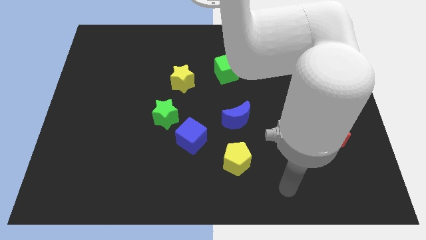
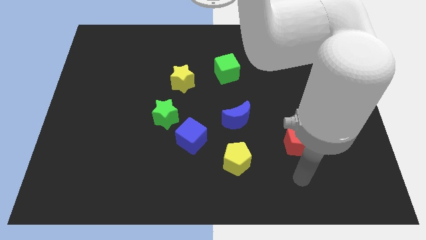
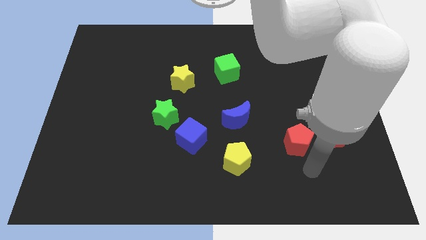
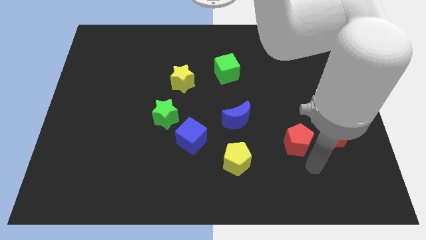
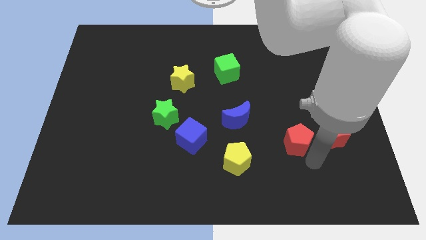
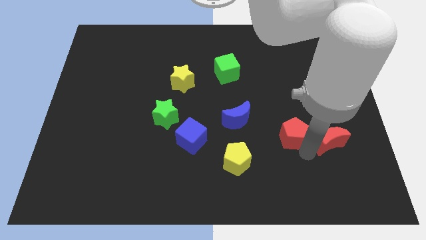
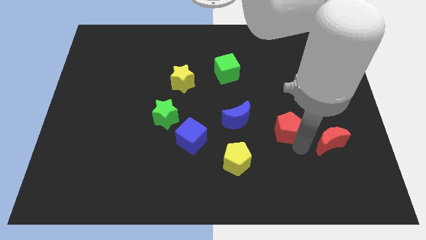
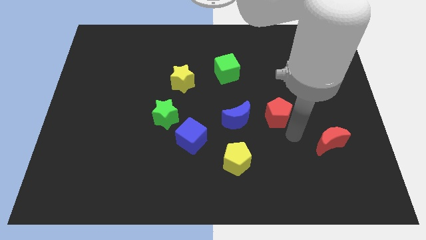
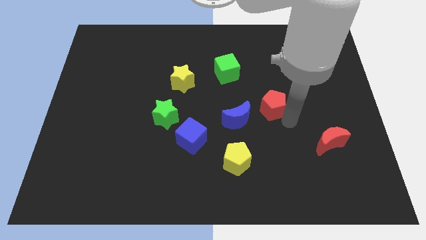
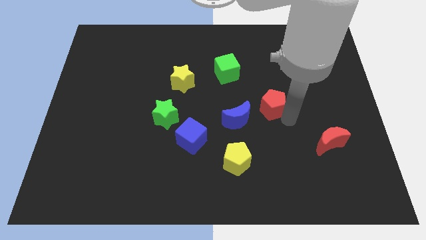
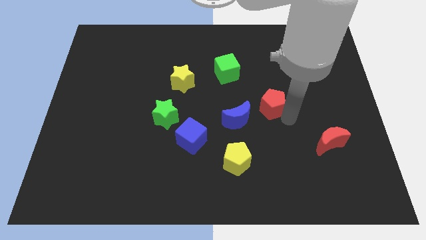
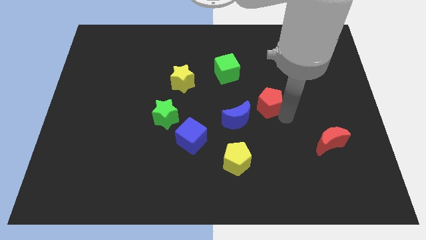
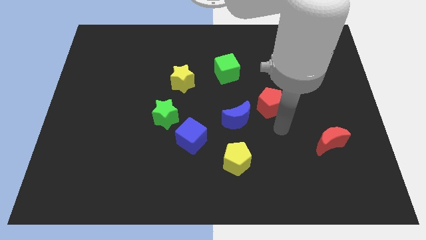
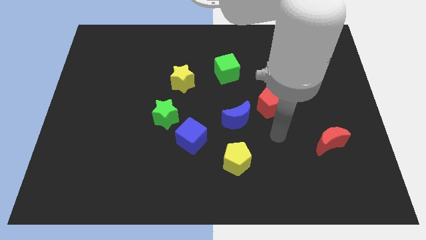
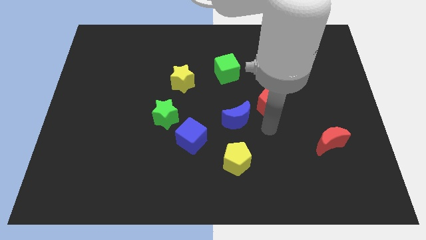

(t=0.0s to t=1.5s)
push the red pentagon to the top right of the blue moon

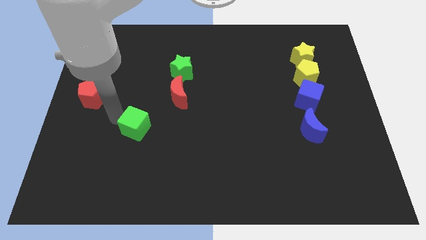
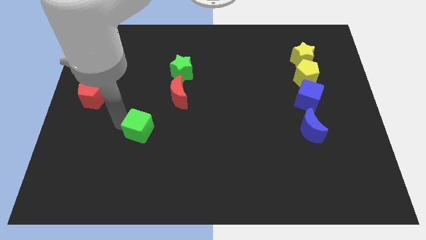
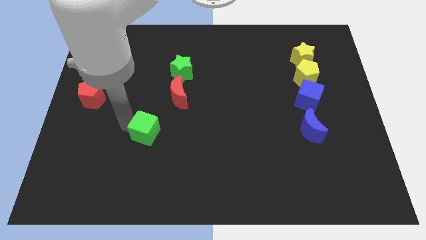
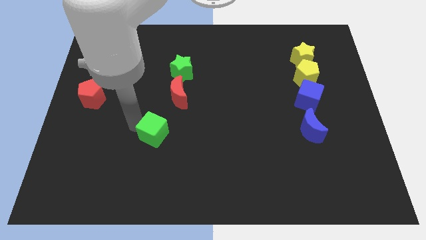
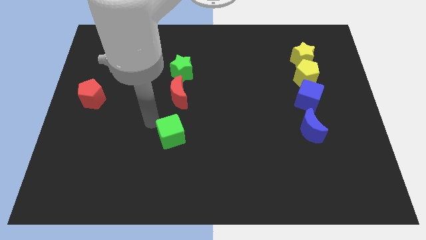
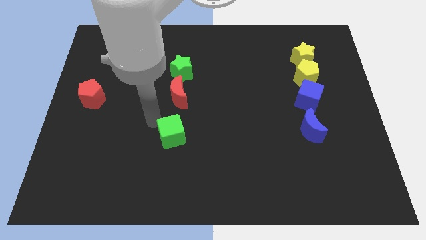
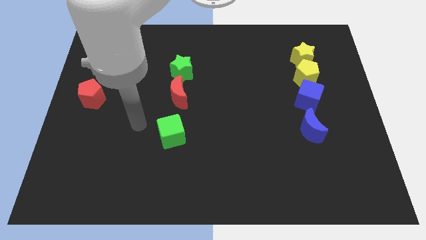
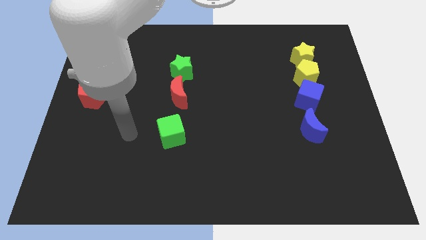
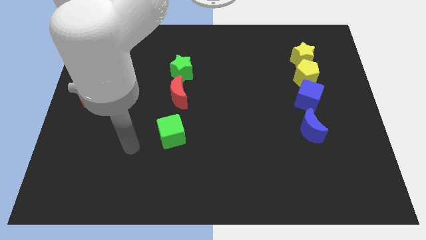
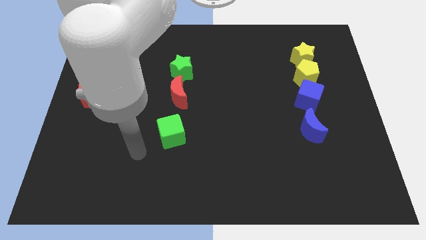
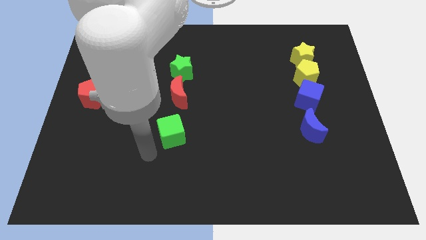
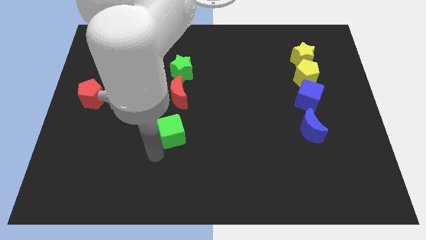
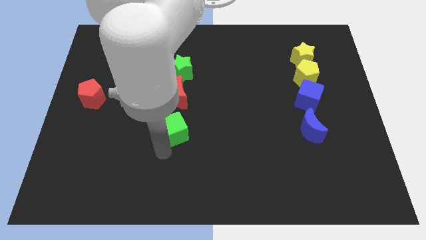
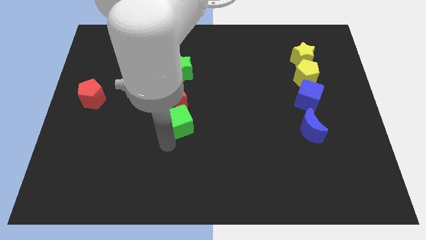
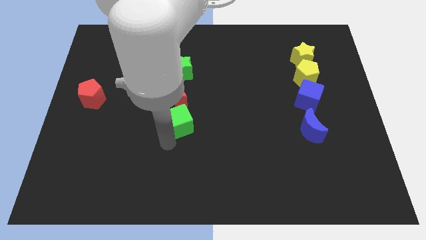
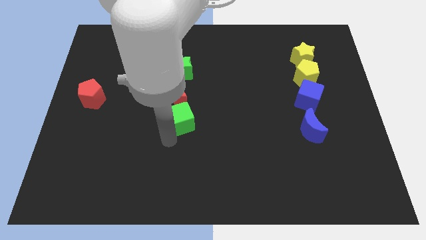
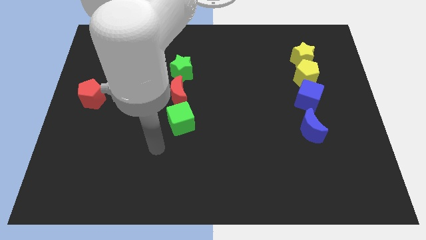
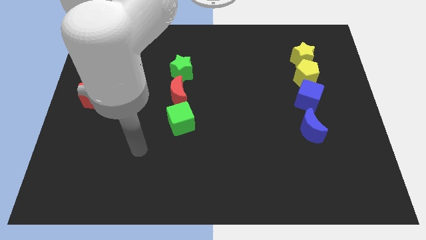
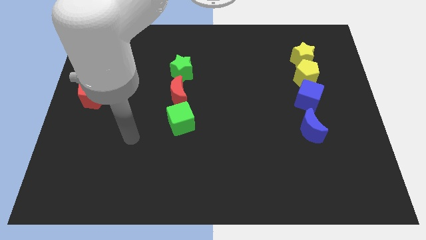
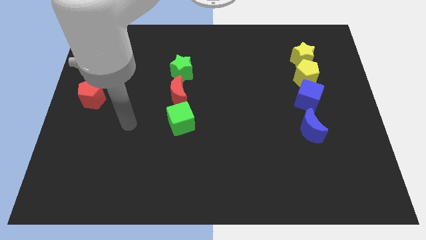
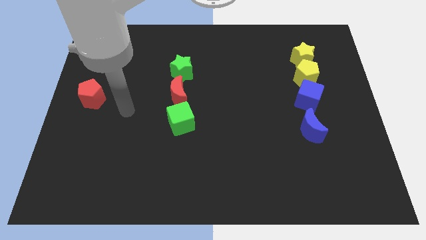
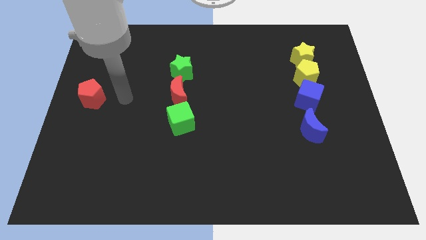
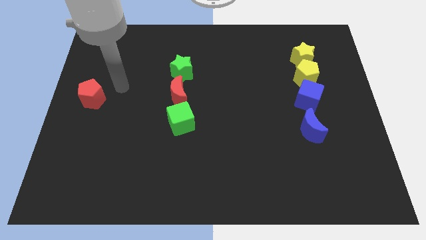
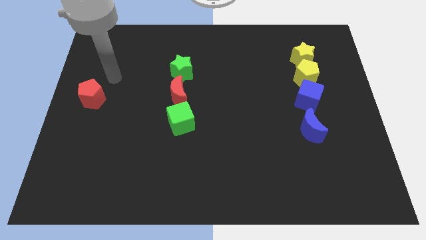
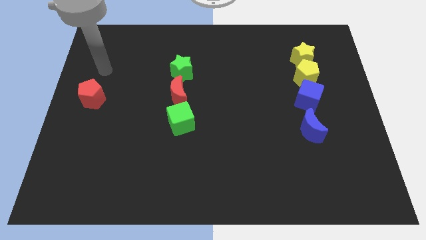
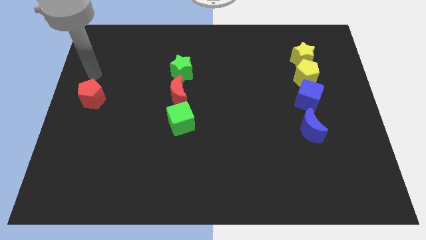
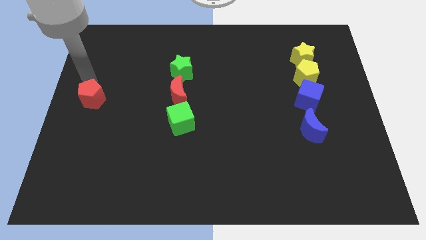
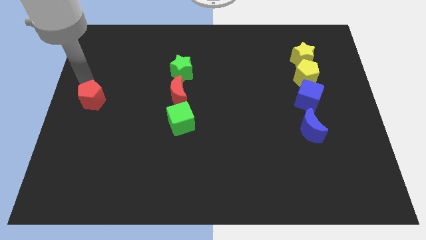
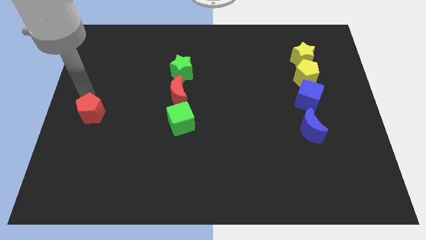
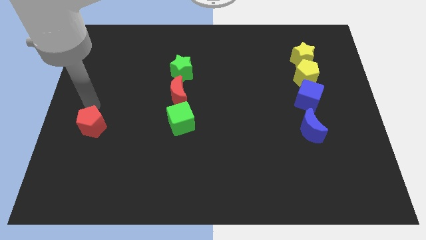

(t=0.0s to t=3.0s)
drag the green cube and place it below the red moon

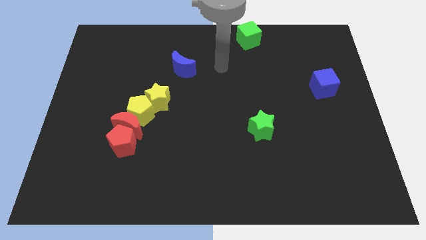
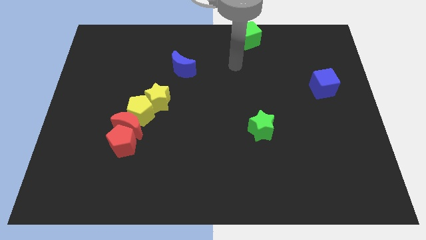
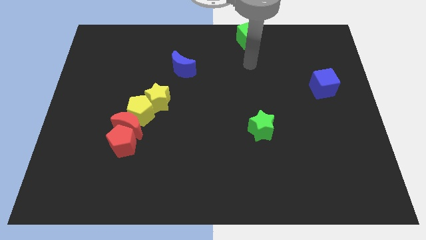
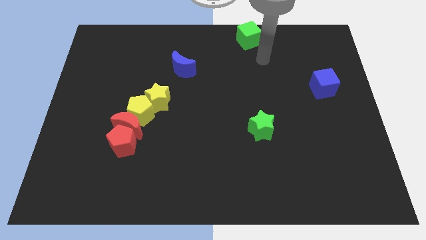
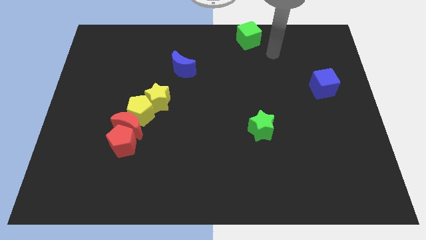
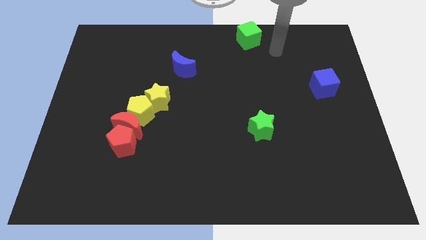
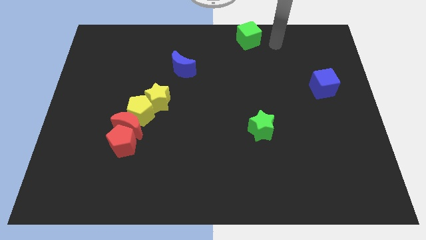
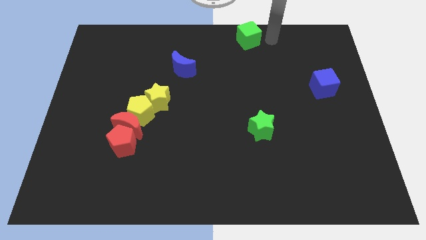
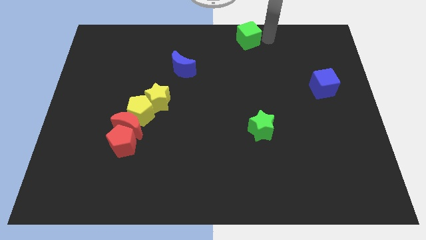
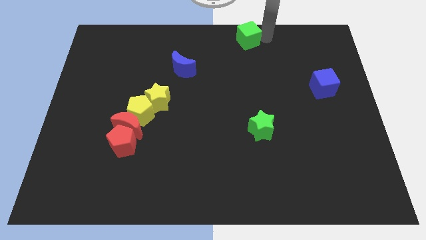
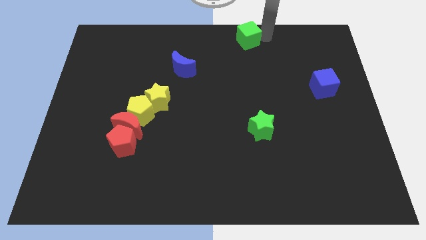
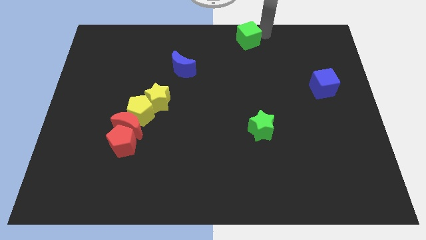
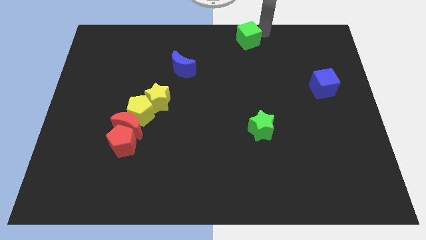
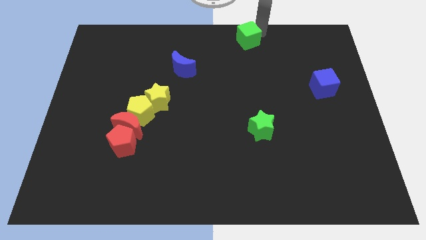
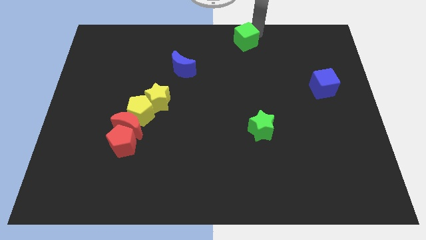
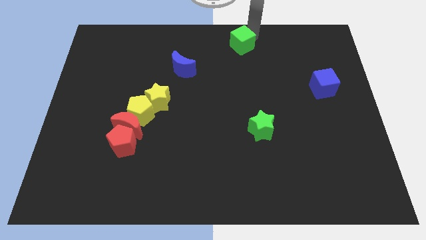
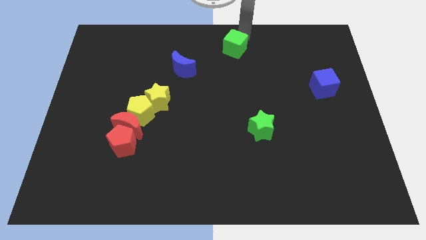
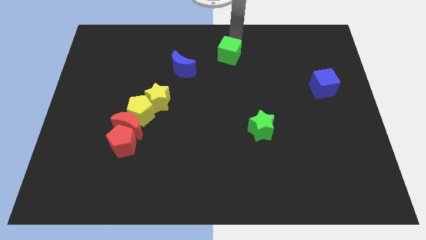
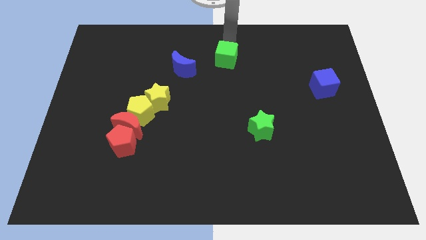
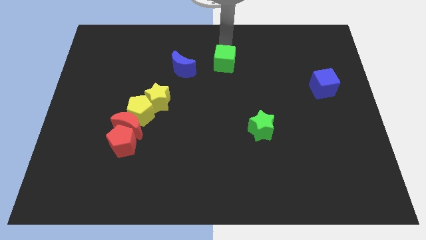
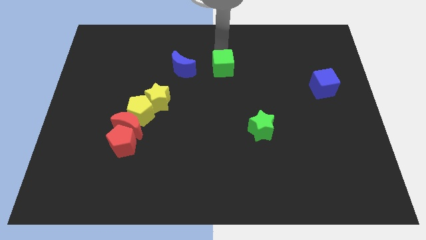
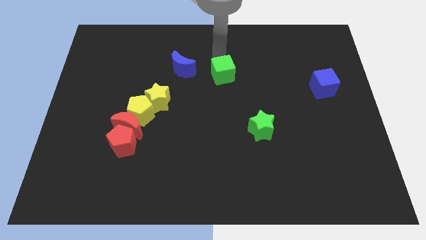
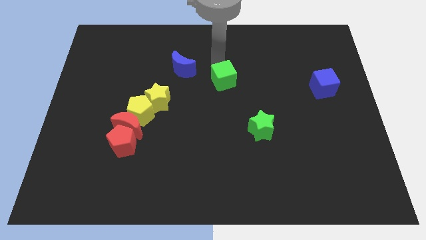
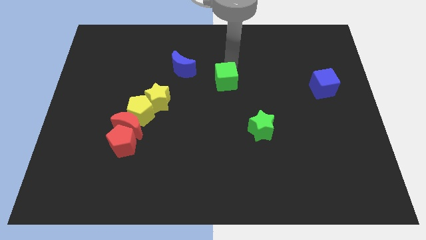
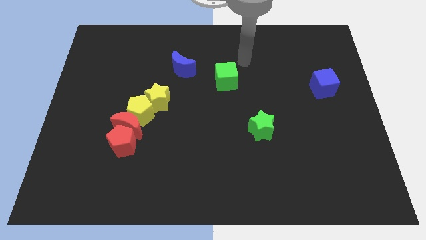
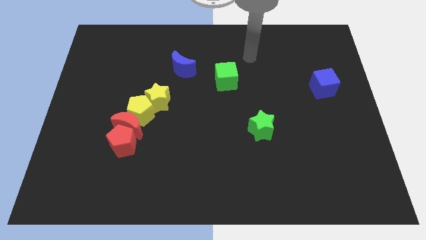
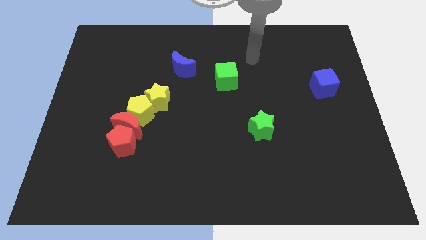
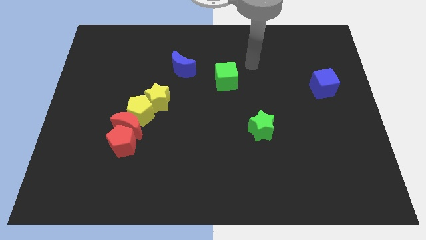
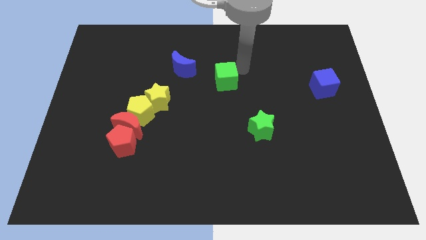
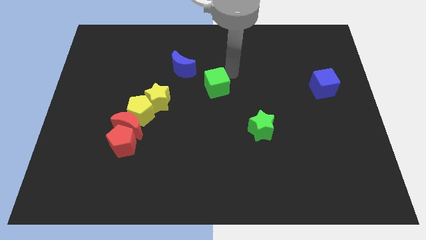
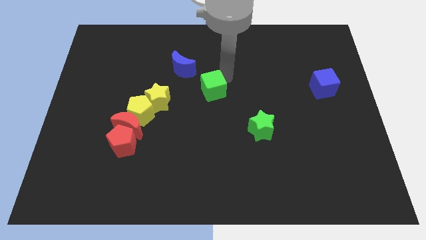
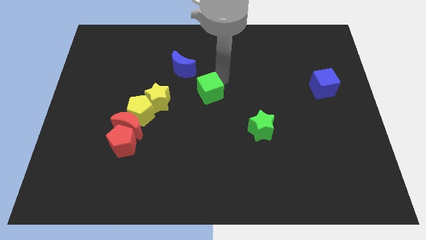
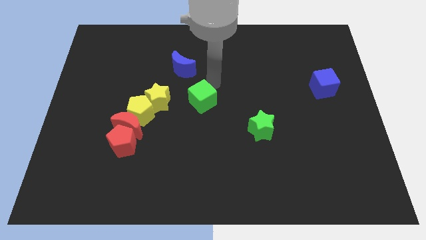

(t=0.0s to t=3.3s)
place the green cube horizontal to the blue cube on the left side

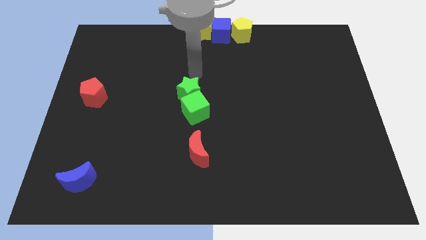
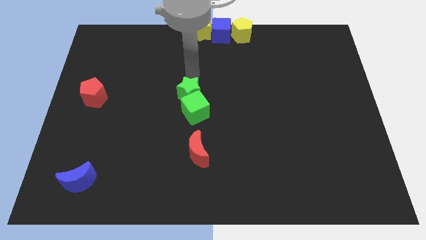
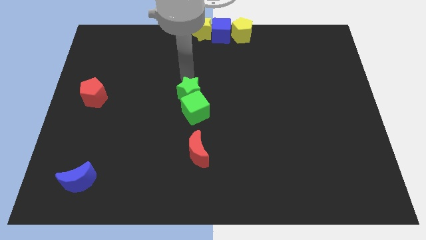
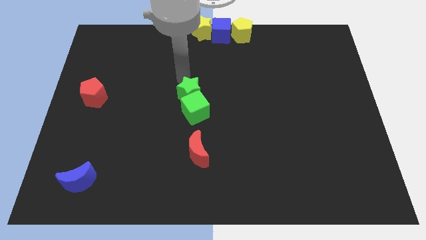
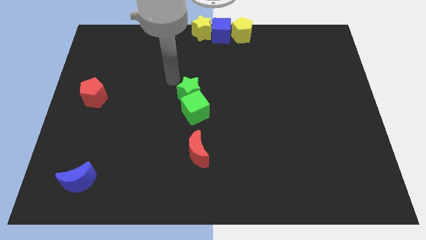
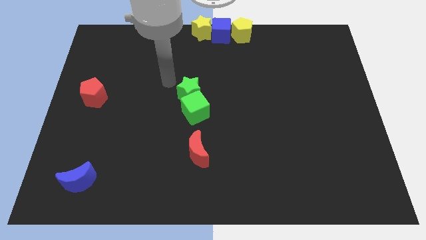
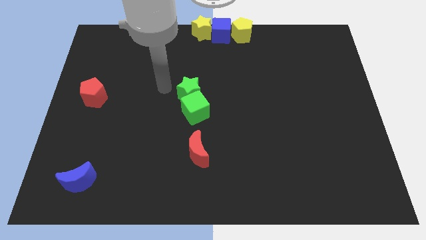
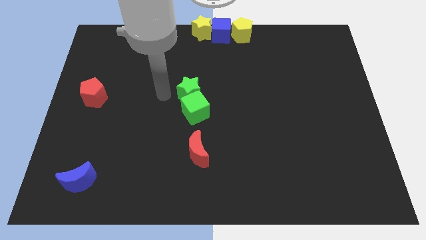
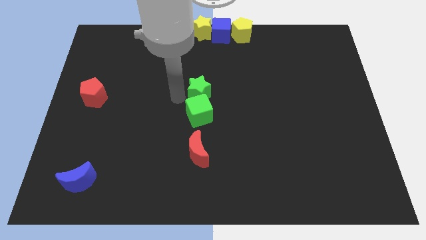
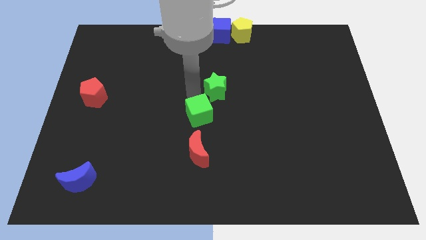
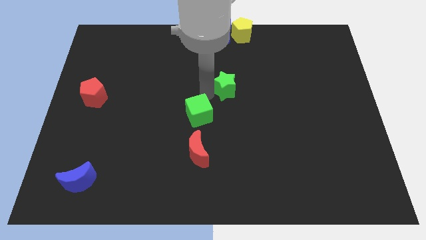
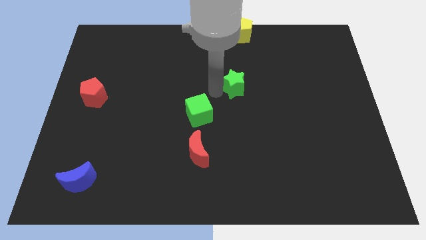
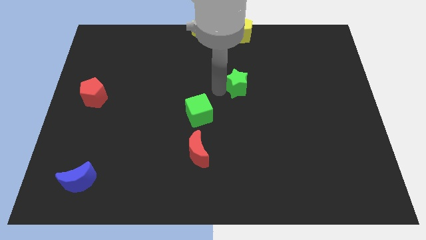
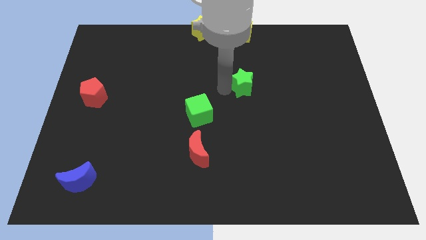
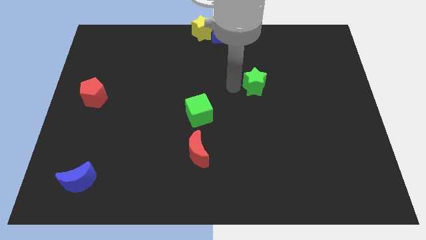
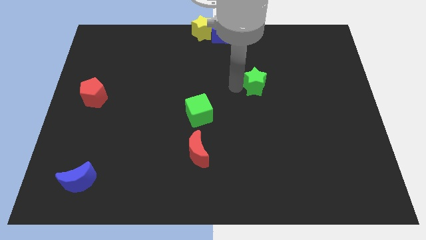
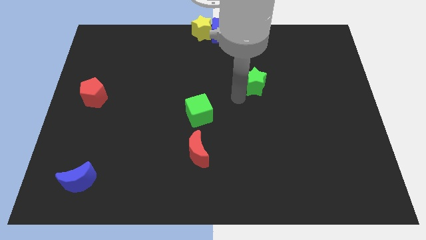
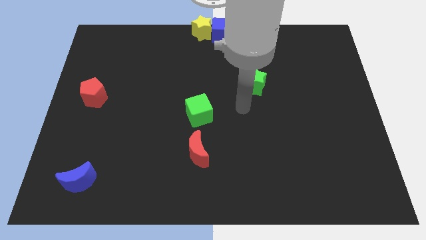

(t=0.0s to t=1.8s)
separate the green stat from the green cube
